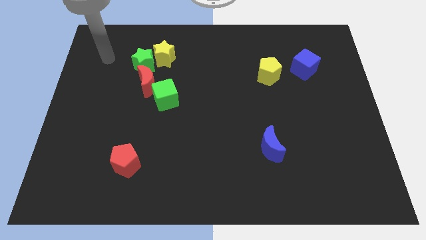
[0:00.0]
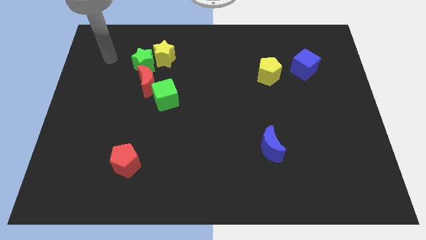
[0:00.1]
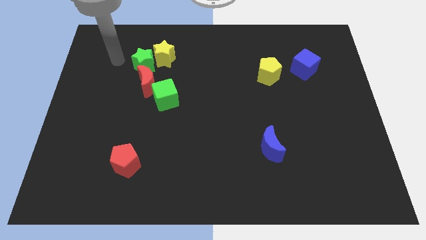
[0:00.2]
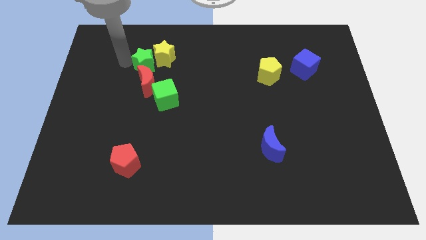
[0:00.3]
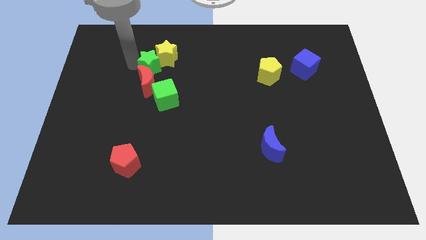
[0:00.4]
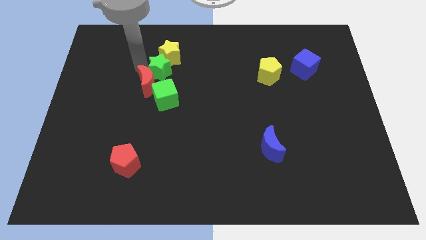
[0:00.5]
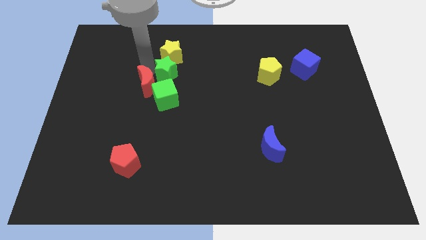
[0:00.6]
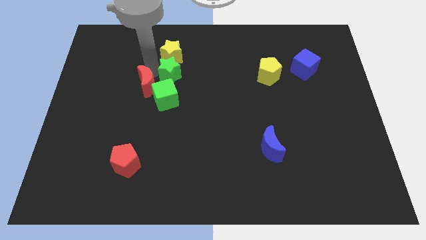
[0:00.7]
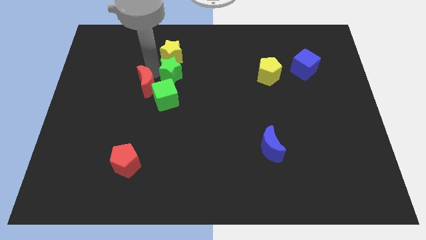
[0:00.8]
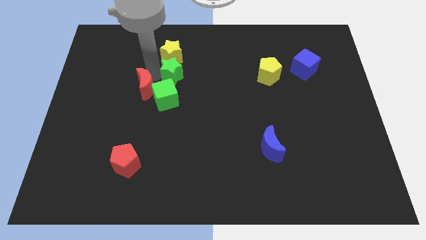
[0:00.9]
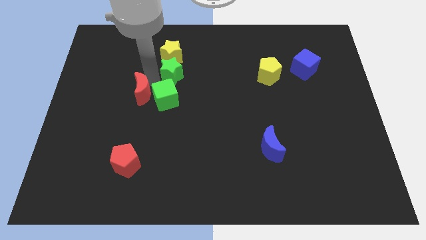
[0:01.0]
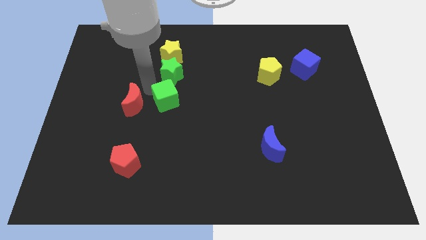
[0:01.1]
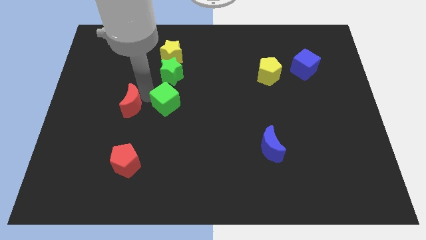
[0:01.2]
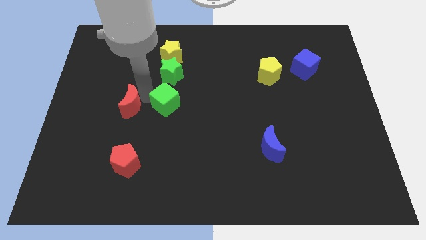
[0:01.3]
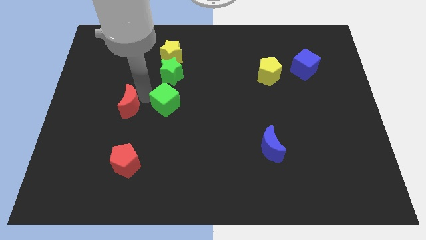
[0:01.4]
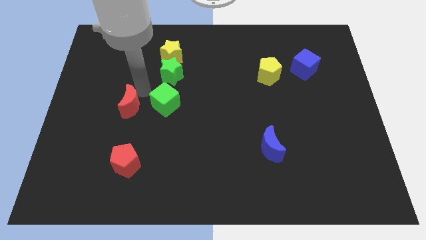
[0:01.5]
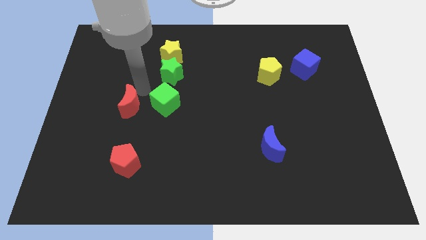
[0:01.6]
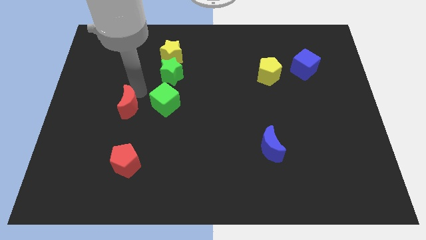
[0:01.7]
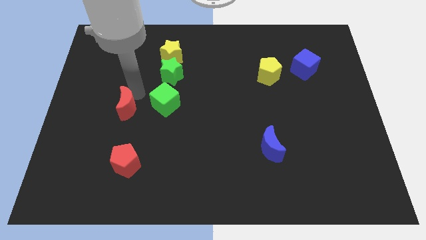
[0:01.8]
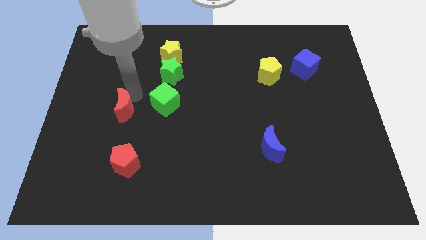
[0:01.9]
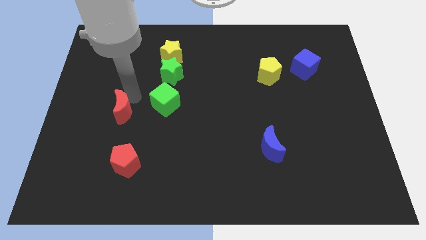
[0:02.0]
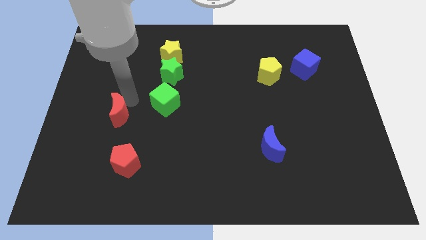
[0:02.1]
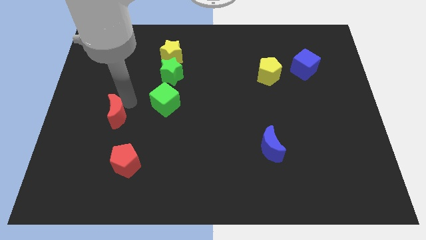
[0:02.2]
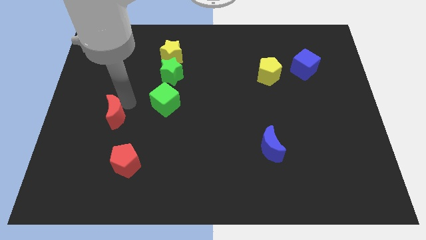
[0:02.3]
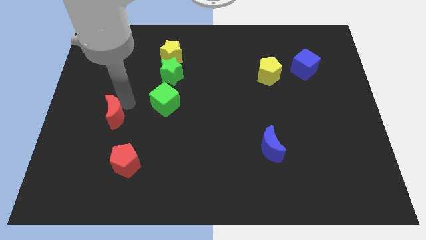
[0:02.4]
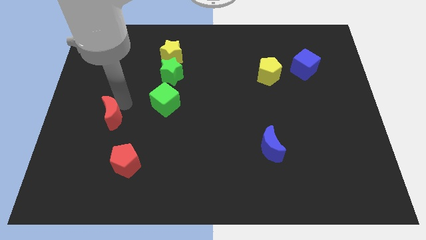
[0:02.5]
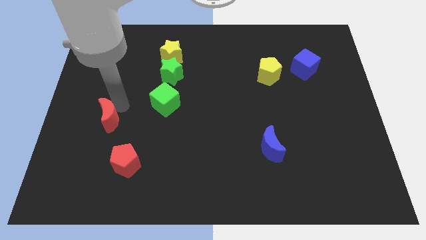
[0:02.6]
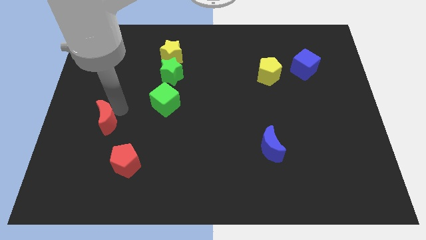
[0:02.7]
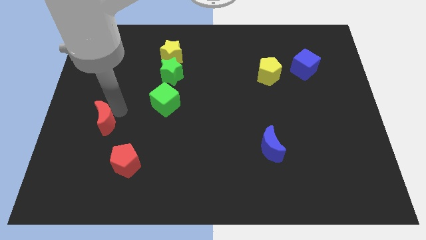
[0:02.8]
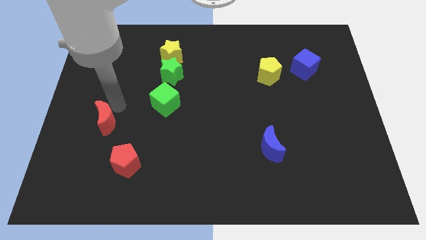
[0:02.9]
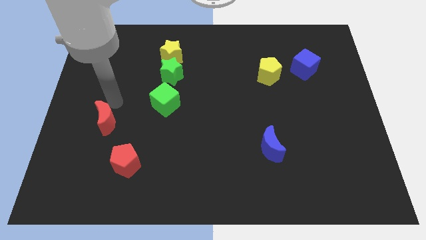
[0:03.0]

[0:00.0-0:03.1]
separate the group of blocks

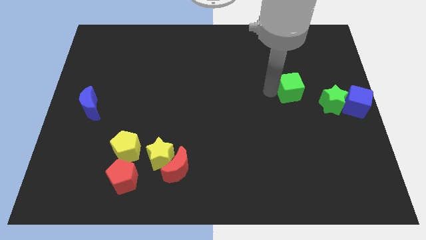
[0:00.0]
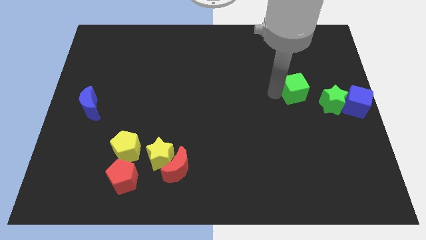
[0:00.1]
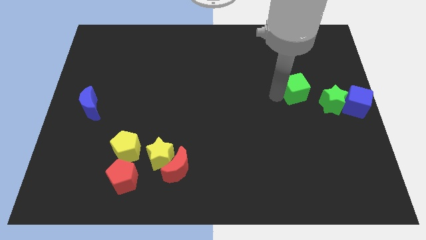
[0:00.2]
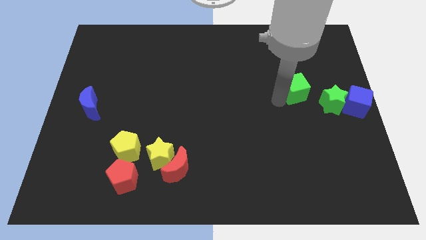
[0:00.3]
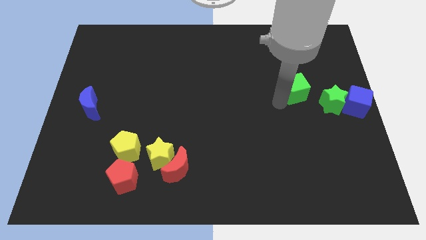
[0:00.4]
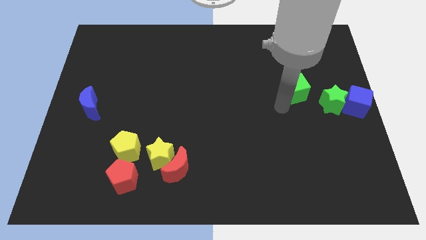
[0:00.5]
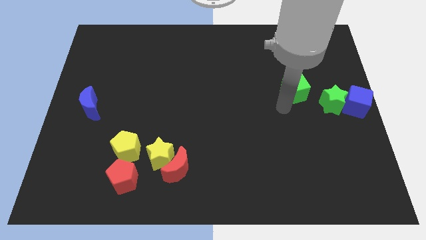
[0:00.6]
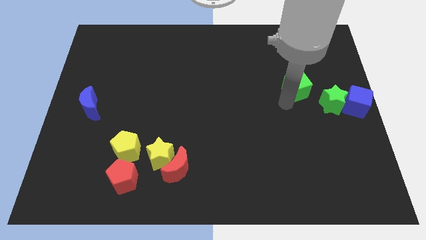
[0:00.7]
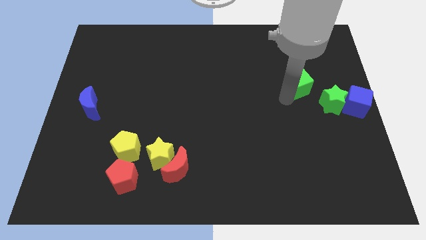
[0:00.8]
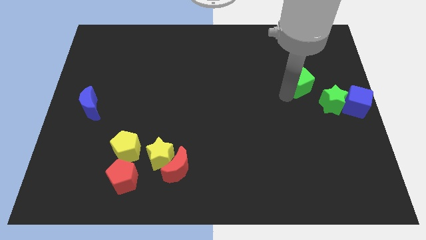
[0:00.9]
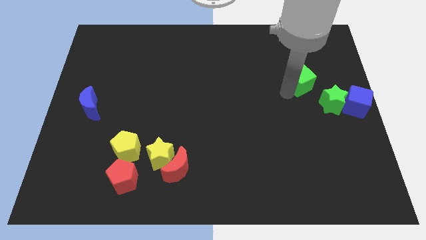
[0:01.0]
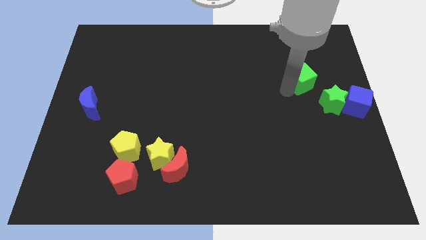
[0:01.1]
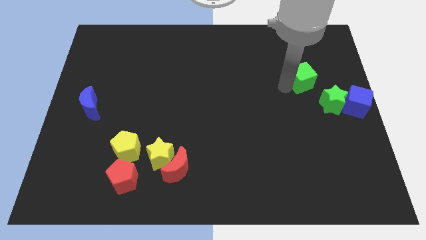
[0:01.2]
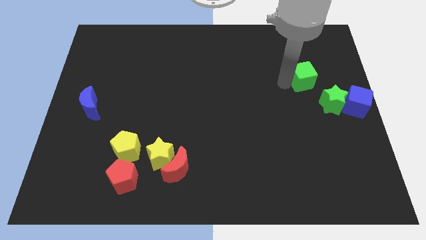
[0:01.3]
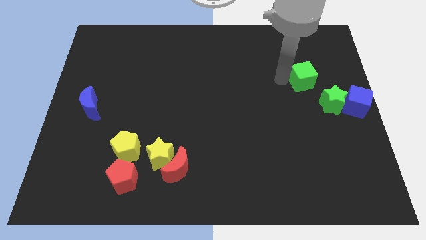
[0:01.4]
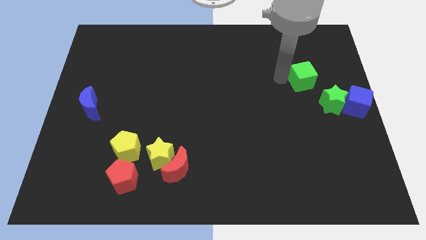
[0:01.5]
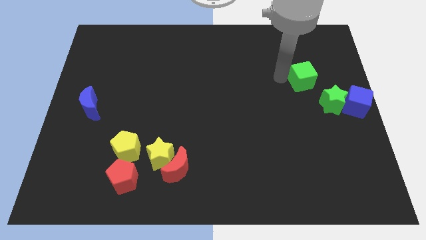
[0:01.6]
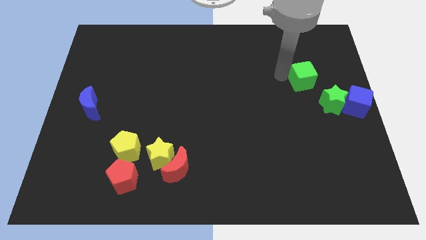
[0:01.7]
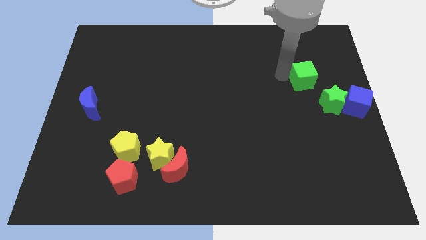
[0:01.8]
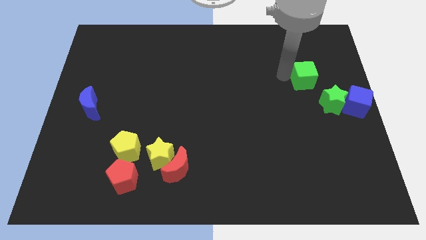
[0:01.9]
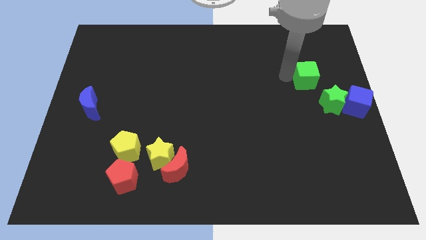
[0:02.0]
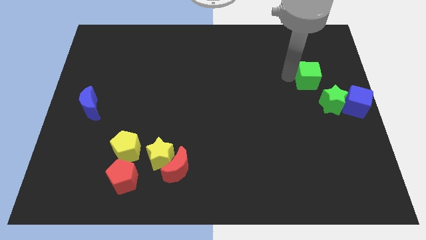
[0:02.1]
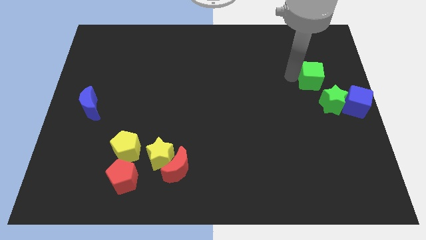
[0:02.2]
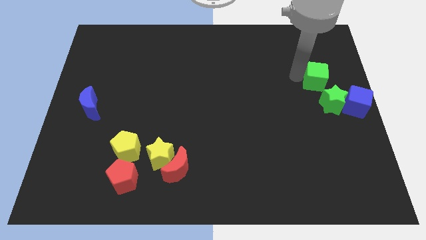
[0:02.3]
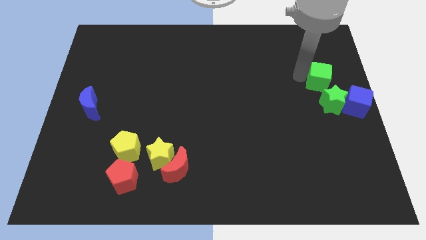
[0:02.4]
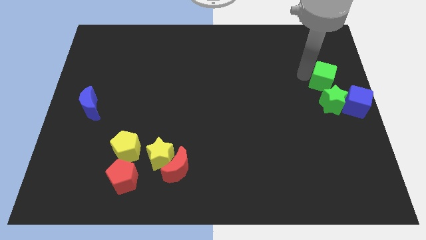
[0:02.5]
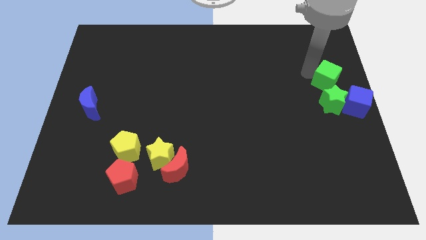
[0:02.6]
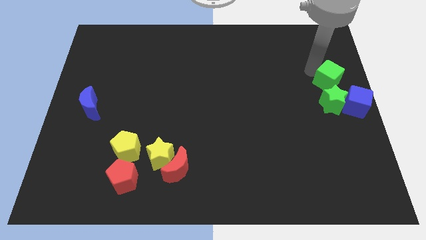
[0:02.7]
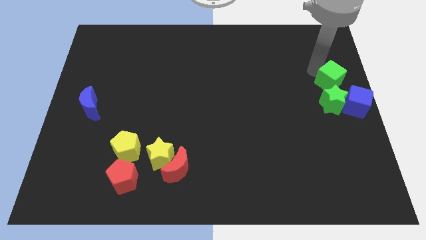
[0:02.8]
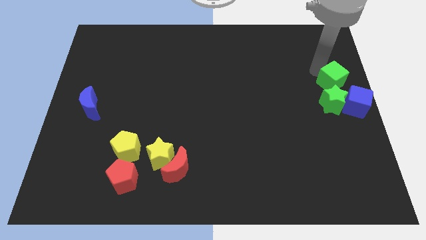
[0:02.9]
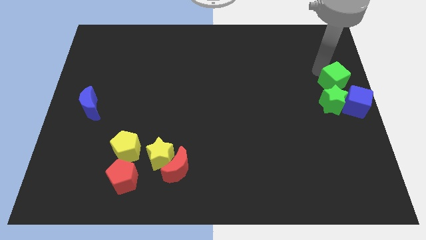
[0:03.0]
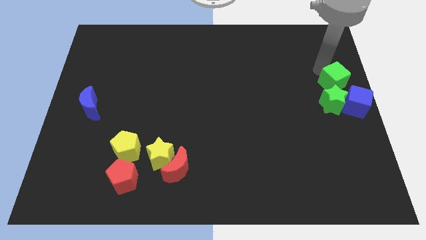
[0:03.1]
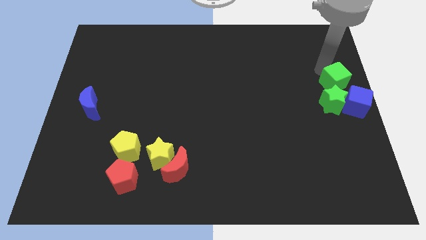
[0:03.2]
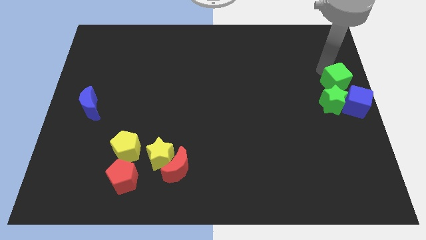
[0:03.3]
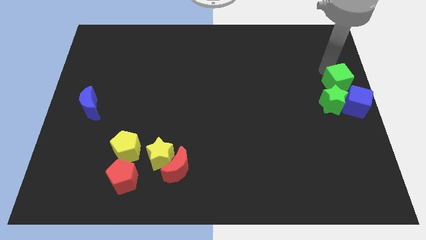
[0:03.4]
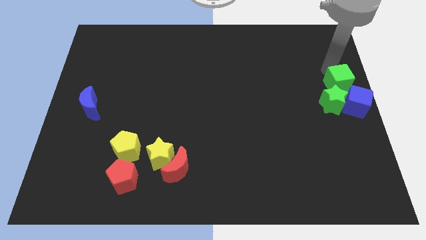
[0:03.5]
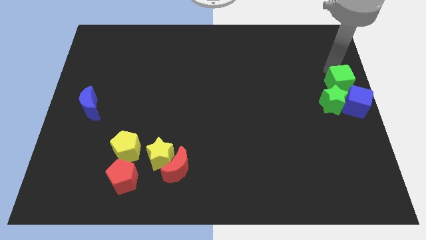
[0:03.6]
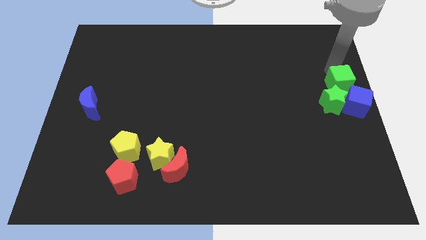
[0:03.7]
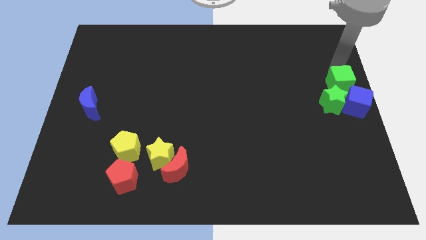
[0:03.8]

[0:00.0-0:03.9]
push the green cube to the top of the green star

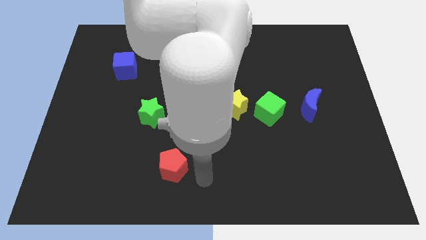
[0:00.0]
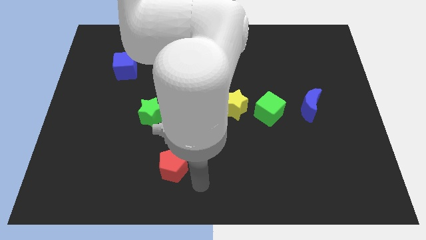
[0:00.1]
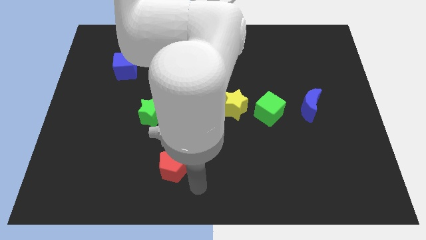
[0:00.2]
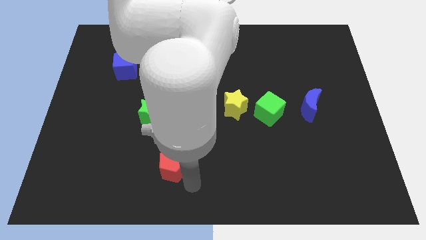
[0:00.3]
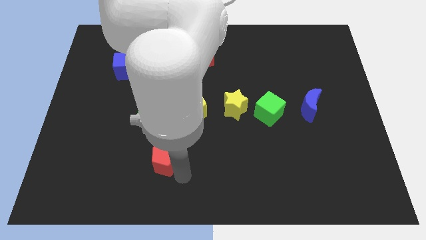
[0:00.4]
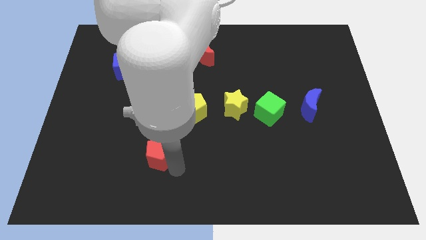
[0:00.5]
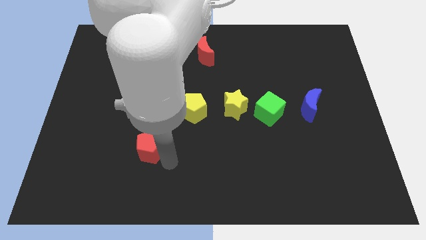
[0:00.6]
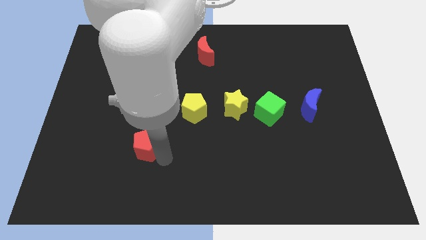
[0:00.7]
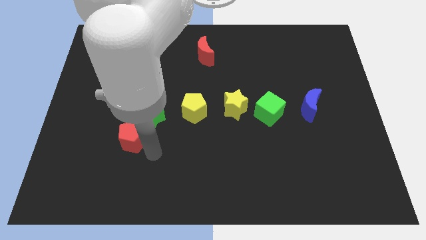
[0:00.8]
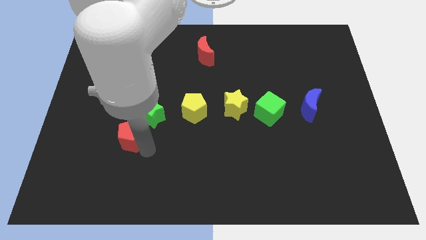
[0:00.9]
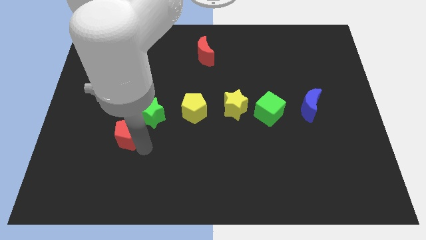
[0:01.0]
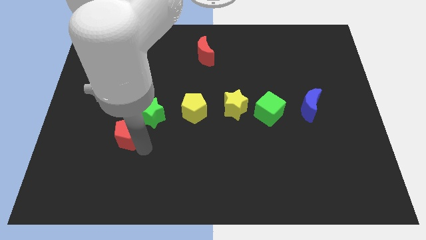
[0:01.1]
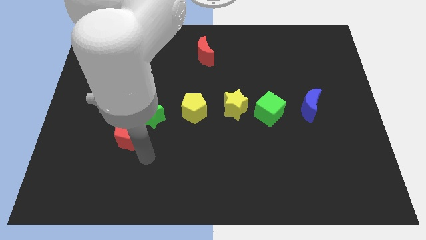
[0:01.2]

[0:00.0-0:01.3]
move the red pentagon towards the center left

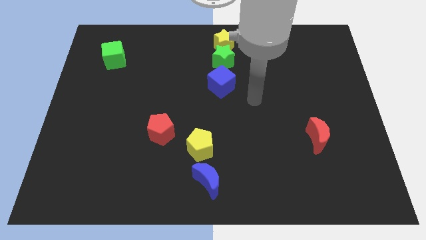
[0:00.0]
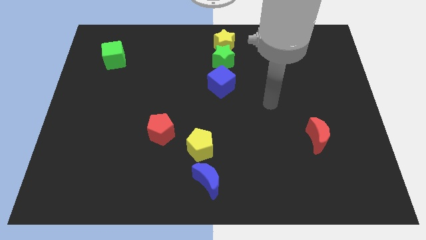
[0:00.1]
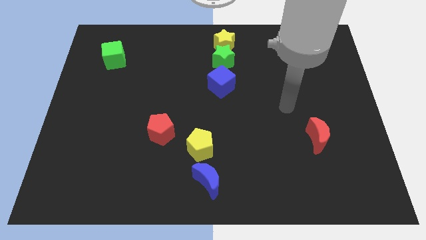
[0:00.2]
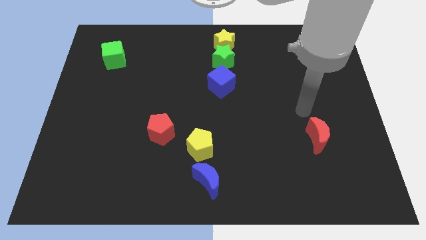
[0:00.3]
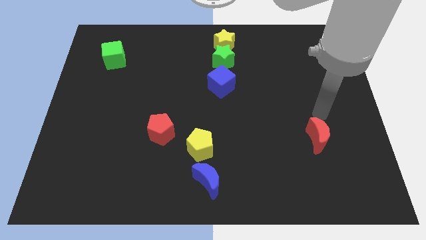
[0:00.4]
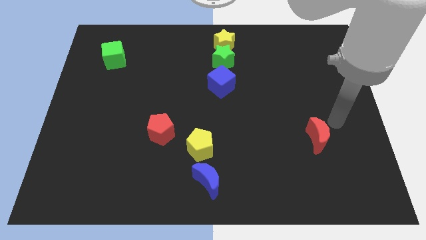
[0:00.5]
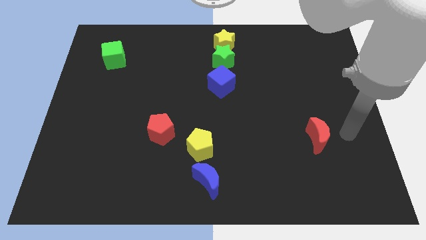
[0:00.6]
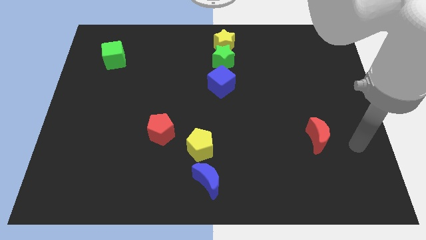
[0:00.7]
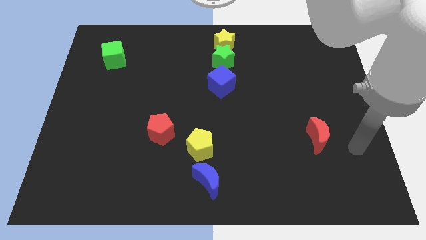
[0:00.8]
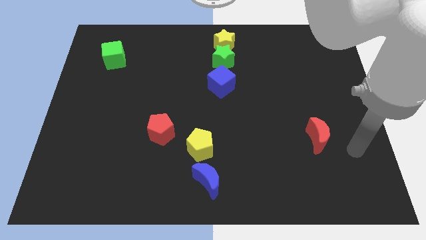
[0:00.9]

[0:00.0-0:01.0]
move the arm away from the blue cube
